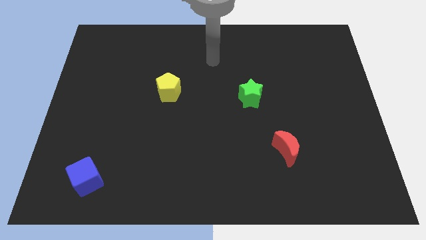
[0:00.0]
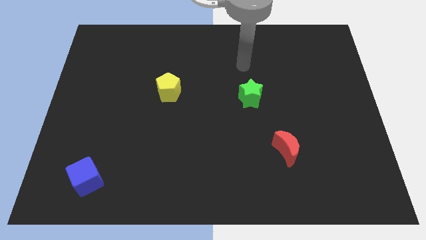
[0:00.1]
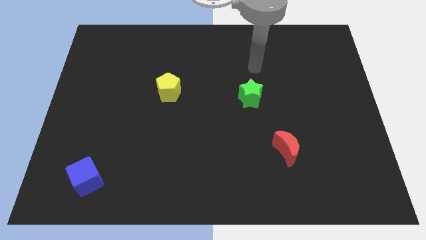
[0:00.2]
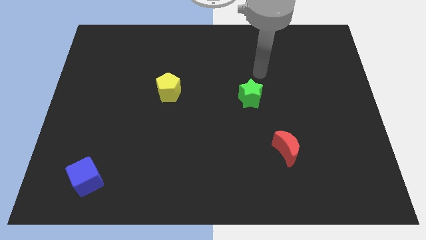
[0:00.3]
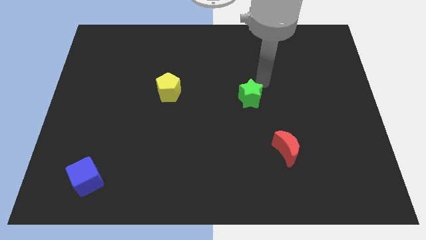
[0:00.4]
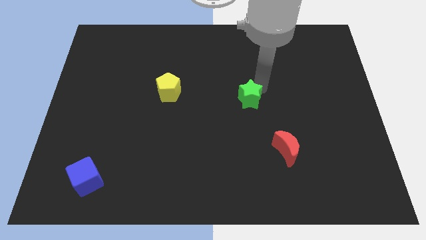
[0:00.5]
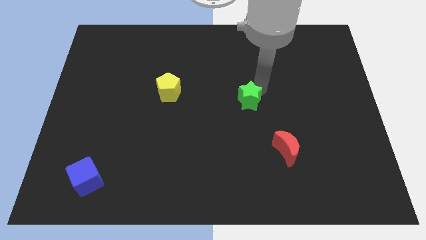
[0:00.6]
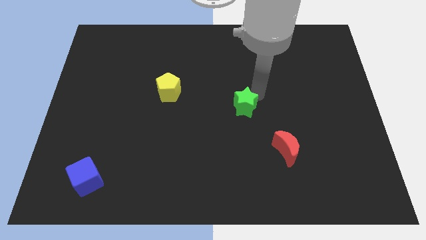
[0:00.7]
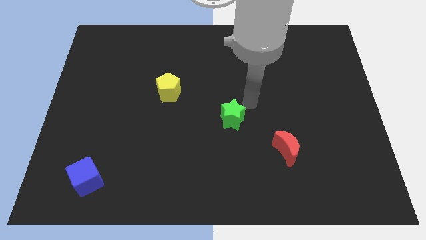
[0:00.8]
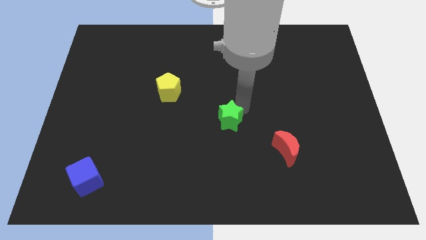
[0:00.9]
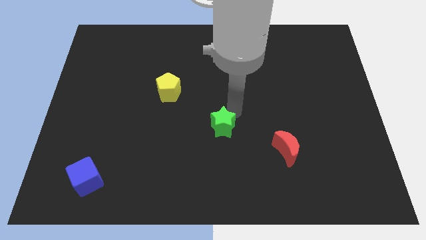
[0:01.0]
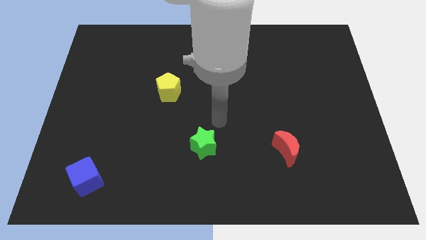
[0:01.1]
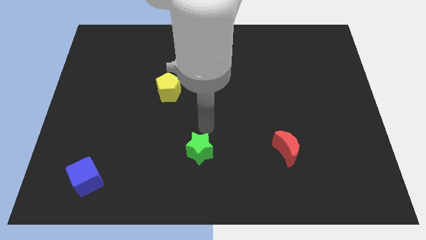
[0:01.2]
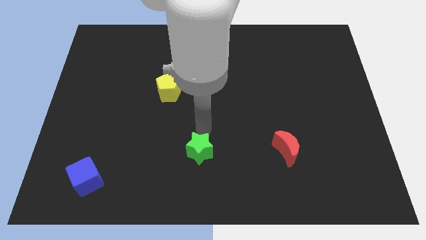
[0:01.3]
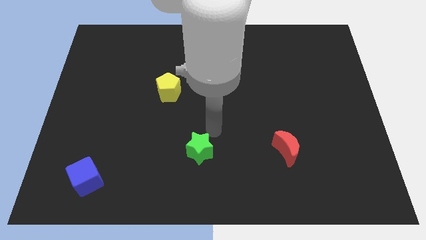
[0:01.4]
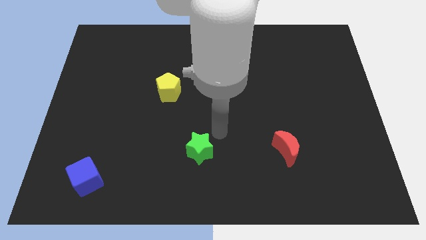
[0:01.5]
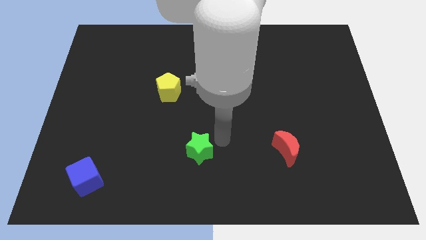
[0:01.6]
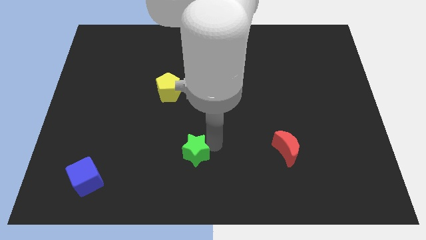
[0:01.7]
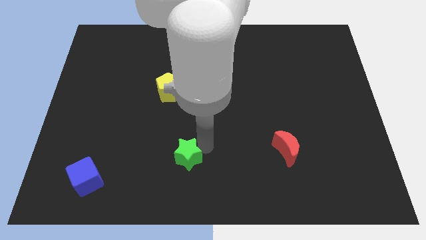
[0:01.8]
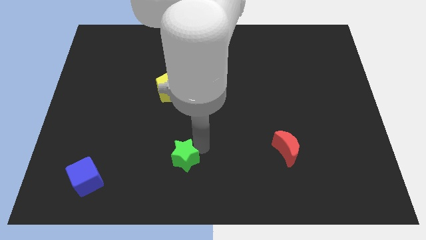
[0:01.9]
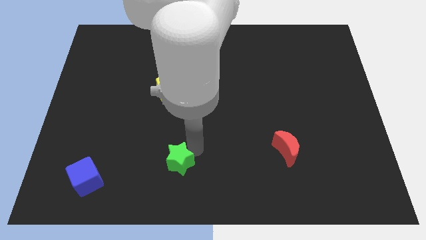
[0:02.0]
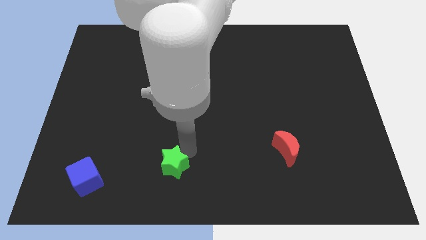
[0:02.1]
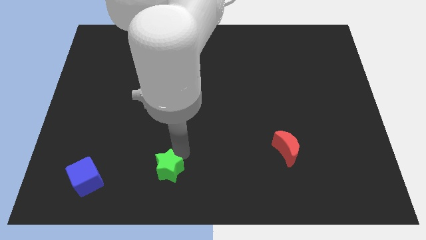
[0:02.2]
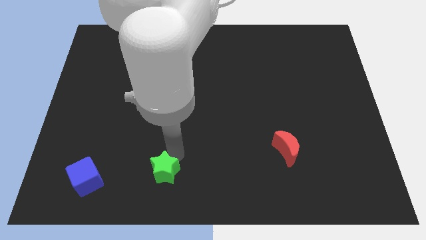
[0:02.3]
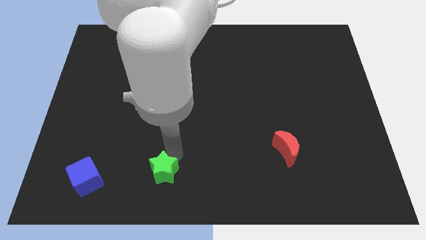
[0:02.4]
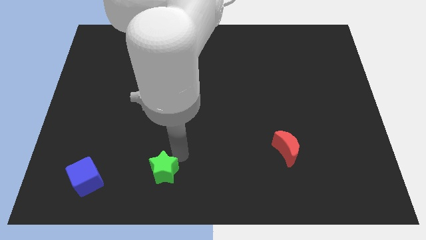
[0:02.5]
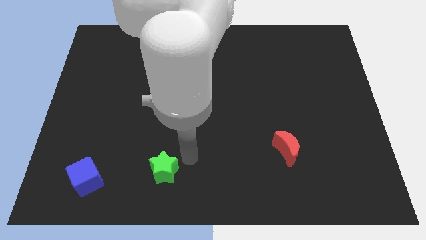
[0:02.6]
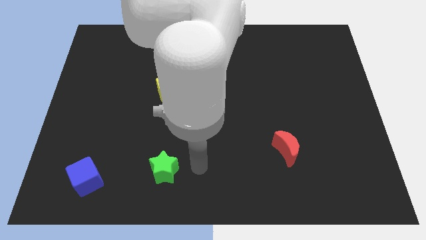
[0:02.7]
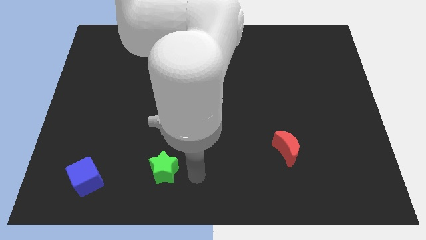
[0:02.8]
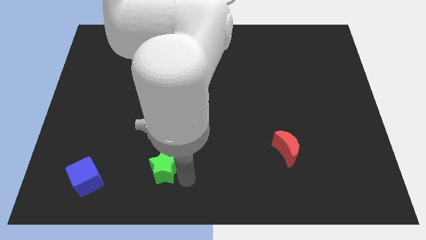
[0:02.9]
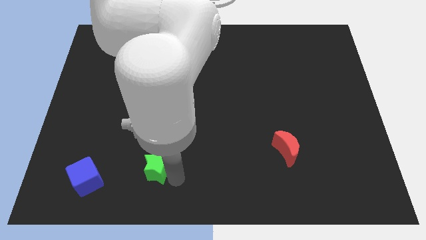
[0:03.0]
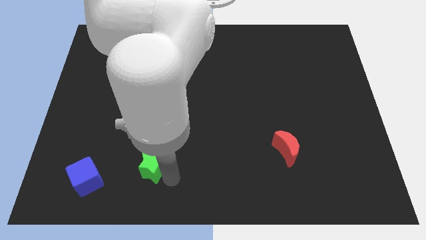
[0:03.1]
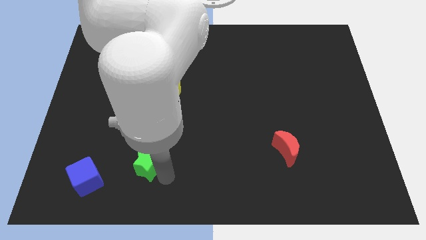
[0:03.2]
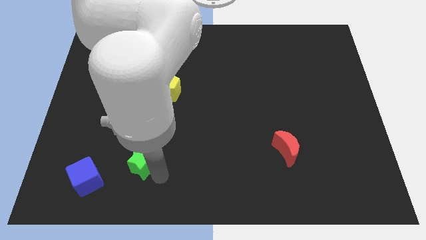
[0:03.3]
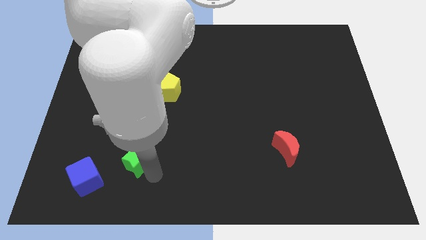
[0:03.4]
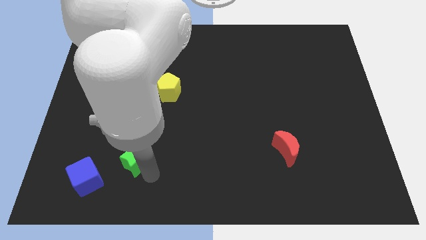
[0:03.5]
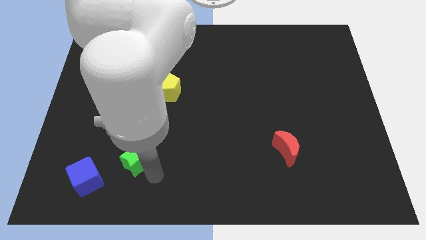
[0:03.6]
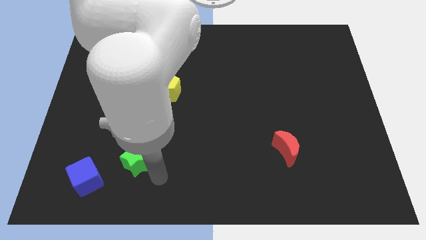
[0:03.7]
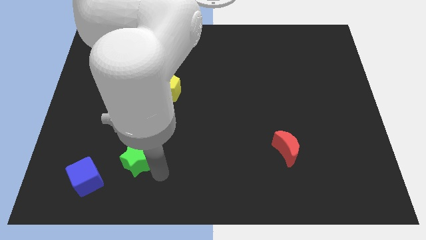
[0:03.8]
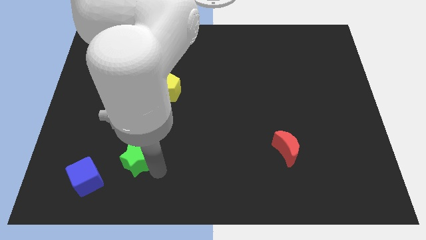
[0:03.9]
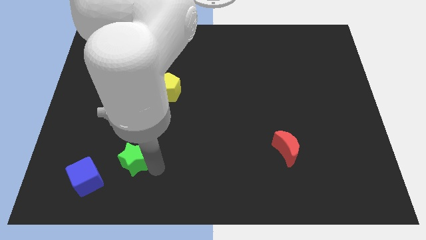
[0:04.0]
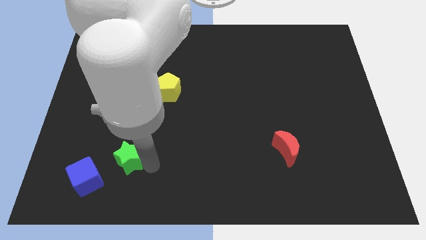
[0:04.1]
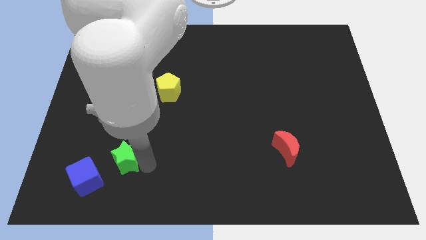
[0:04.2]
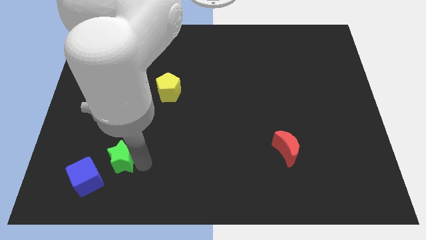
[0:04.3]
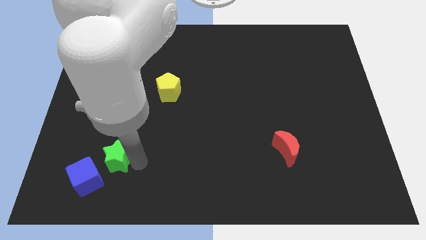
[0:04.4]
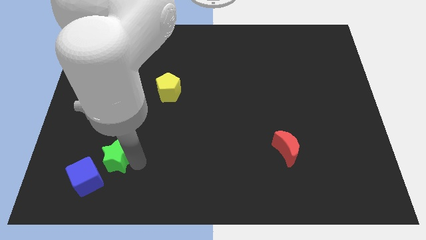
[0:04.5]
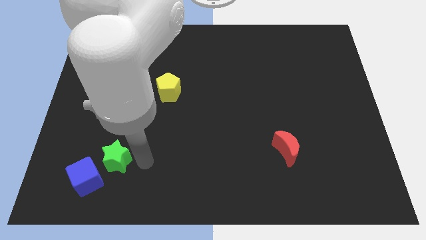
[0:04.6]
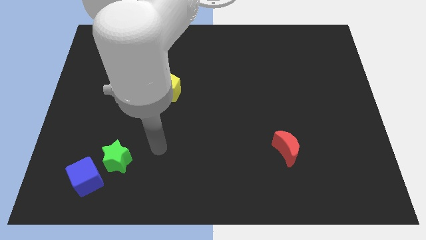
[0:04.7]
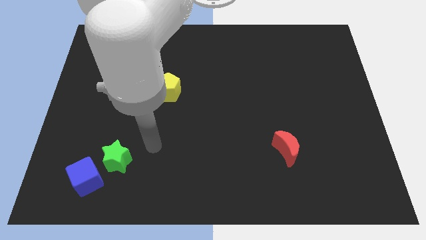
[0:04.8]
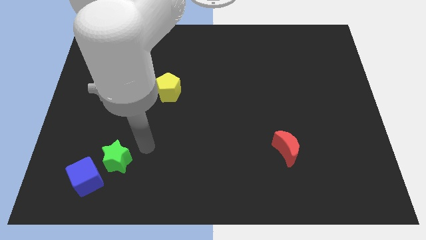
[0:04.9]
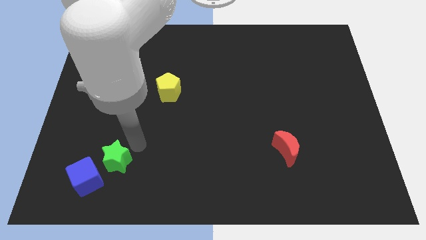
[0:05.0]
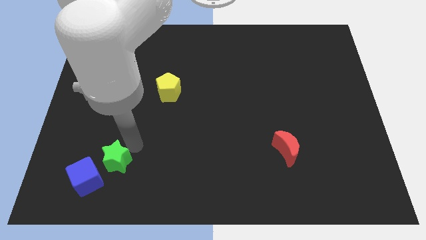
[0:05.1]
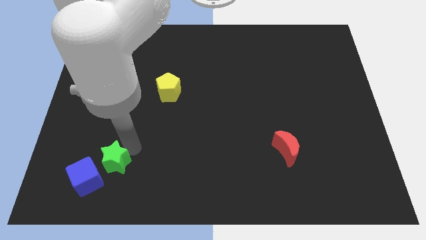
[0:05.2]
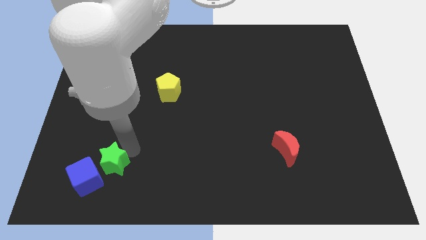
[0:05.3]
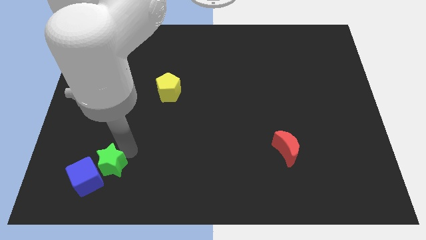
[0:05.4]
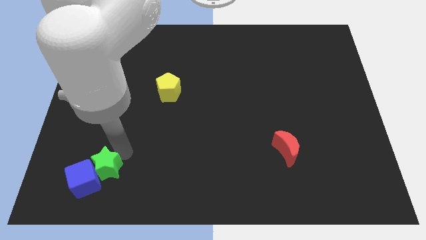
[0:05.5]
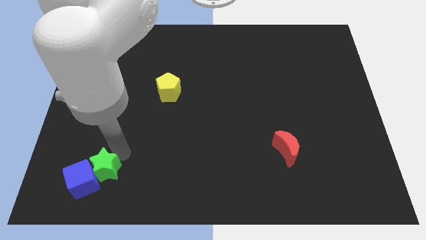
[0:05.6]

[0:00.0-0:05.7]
slide the star next to the blue cube

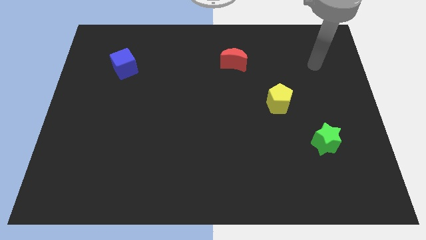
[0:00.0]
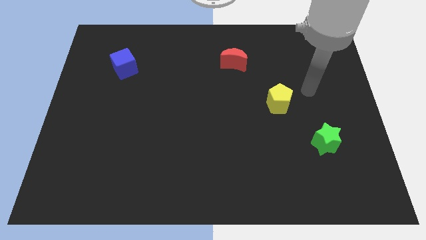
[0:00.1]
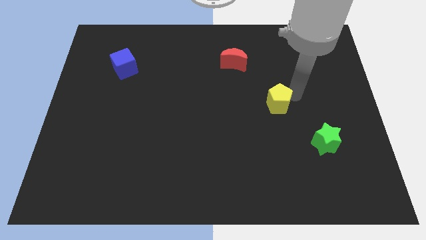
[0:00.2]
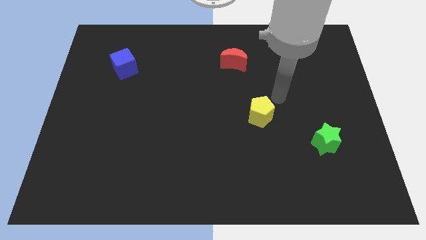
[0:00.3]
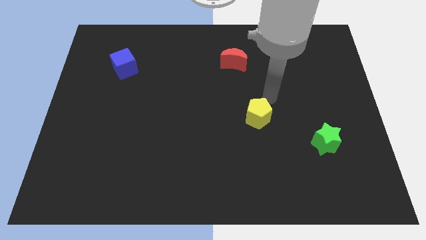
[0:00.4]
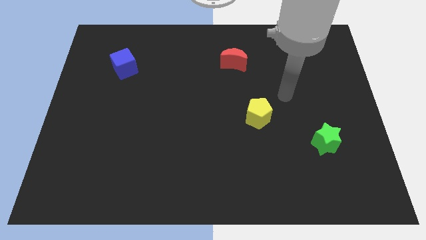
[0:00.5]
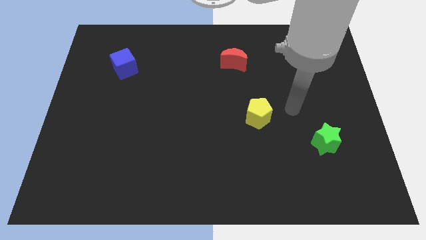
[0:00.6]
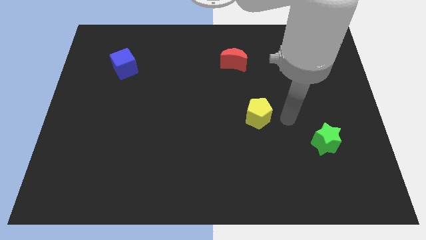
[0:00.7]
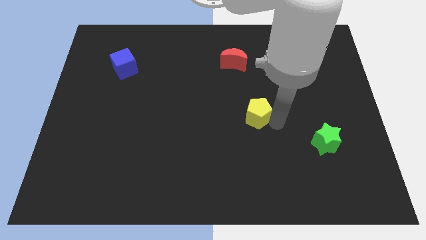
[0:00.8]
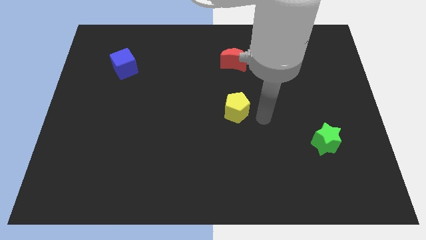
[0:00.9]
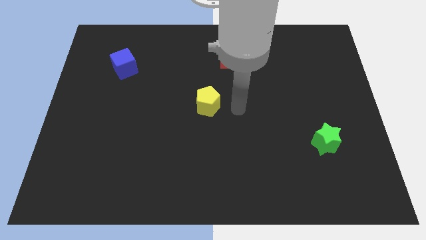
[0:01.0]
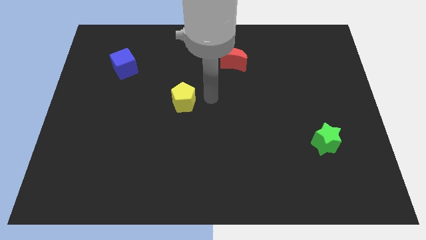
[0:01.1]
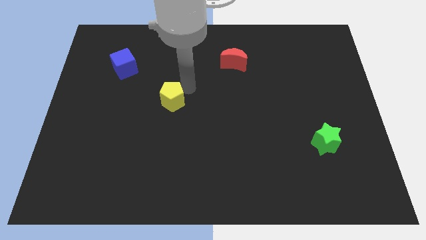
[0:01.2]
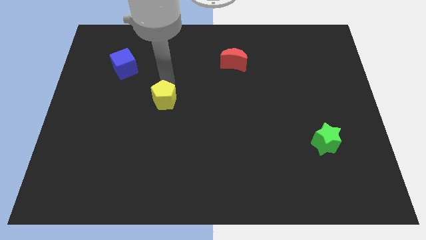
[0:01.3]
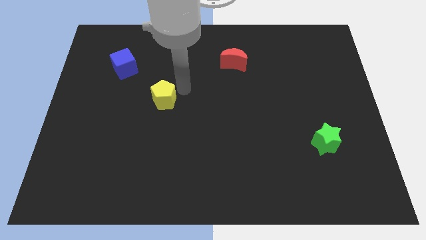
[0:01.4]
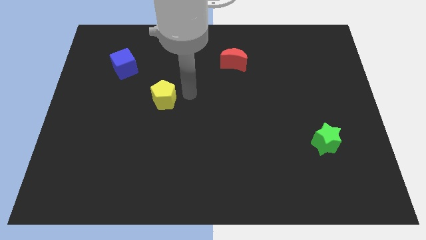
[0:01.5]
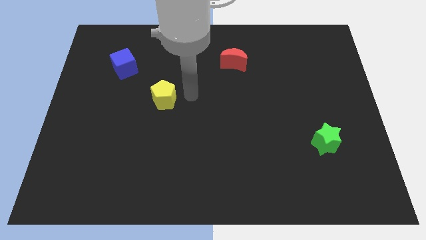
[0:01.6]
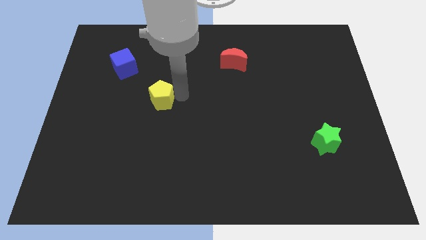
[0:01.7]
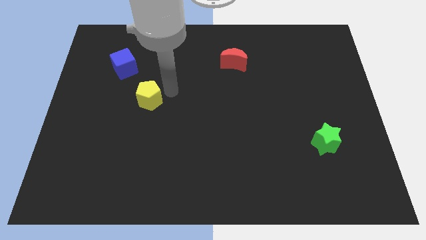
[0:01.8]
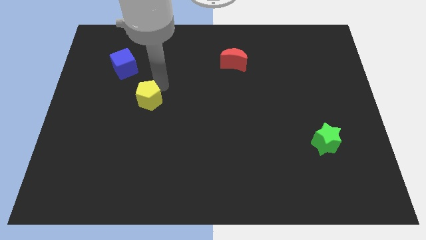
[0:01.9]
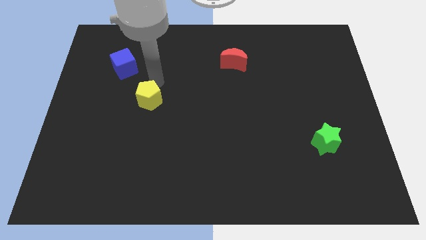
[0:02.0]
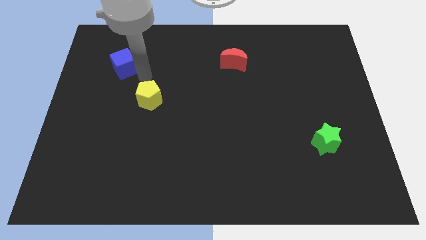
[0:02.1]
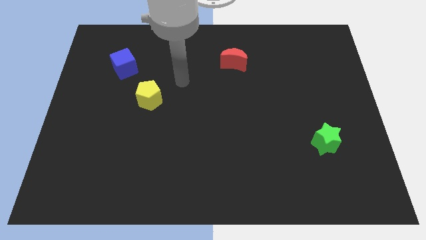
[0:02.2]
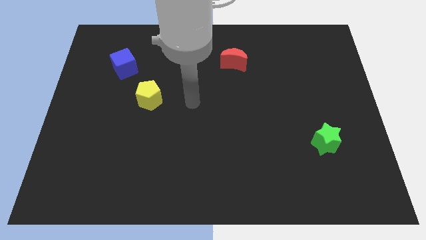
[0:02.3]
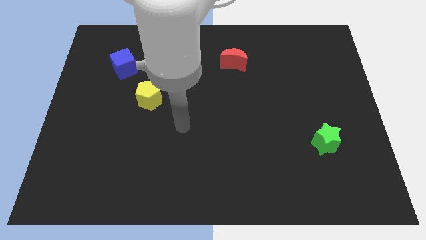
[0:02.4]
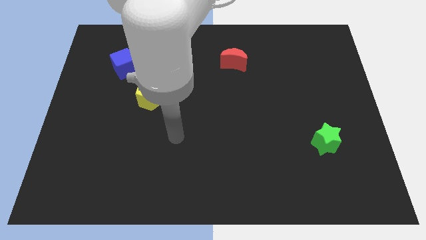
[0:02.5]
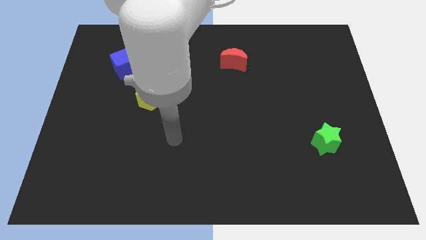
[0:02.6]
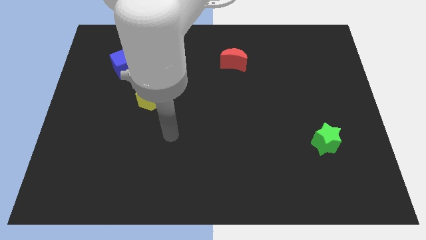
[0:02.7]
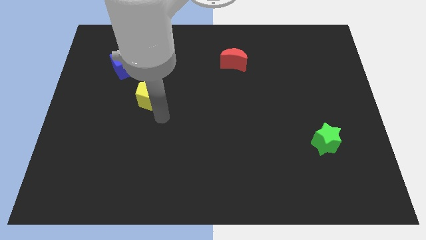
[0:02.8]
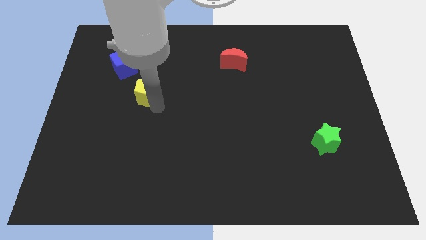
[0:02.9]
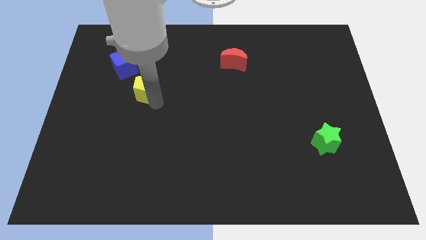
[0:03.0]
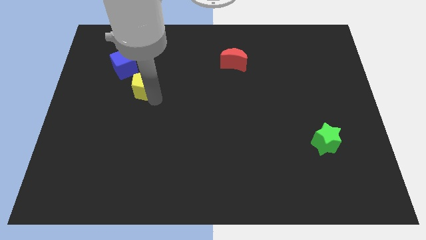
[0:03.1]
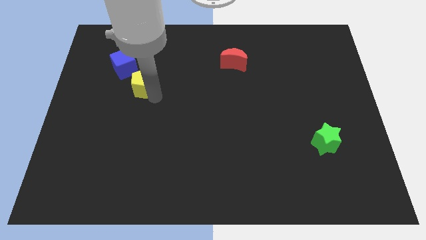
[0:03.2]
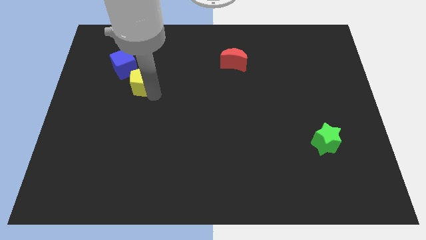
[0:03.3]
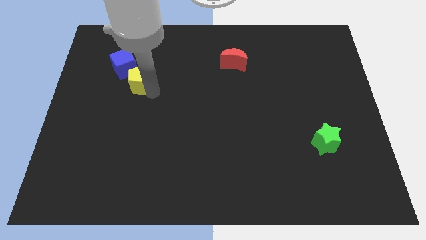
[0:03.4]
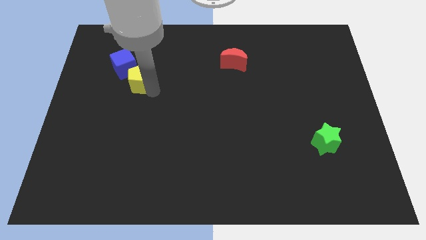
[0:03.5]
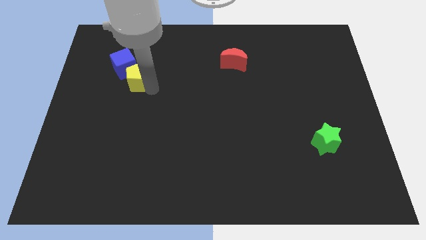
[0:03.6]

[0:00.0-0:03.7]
push the yellow pentagon to the blue cube
